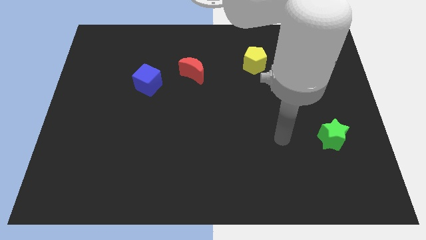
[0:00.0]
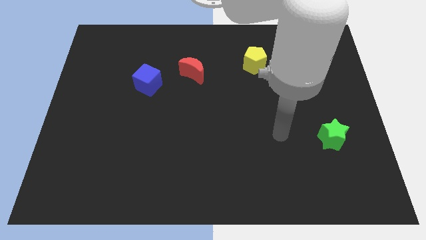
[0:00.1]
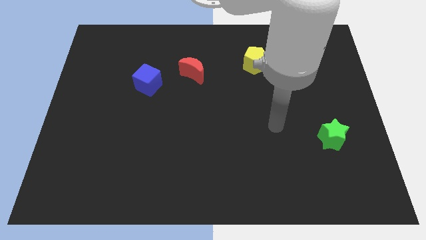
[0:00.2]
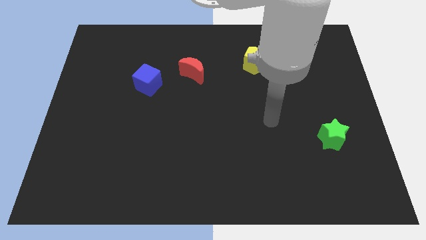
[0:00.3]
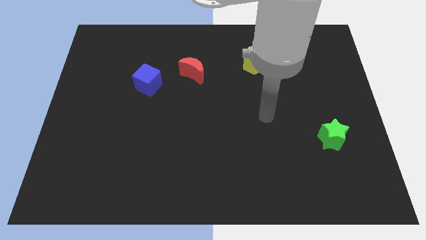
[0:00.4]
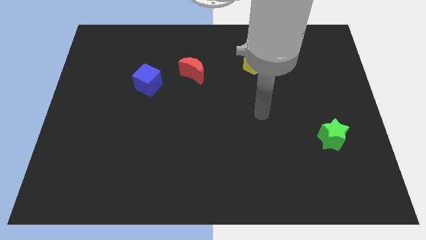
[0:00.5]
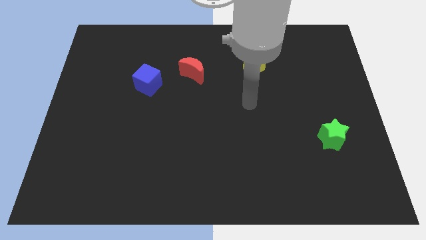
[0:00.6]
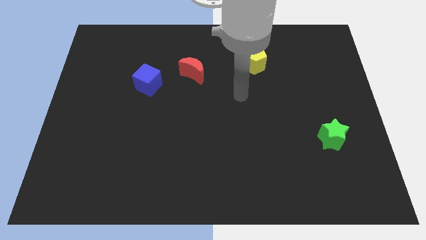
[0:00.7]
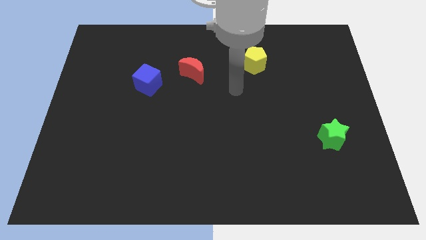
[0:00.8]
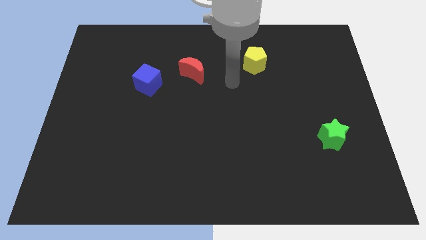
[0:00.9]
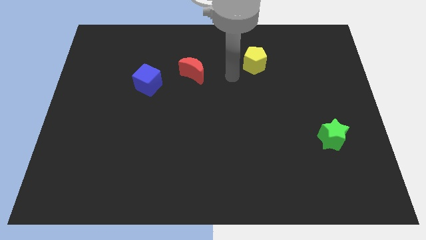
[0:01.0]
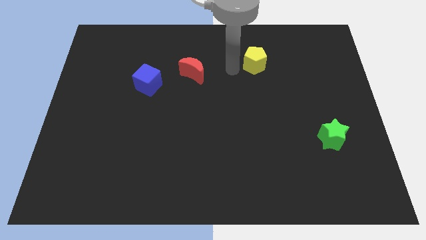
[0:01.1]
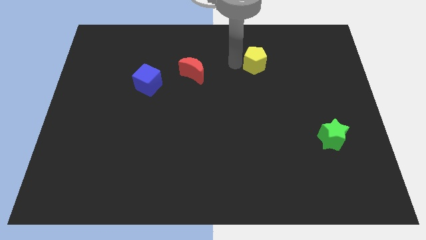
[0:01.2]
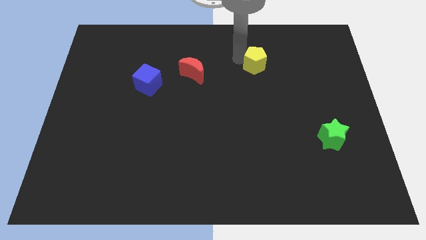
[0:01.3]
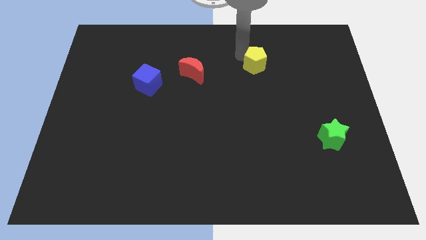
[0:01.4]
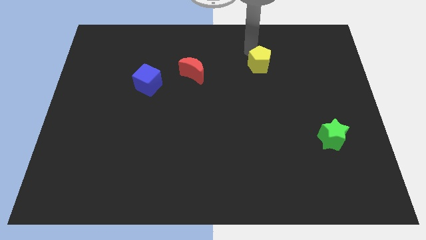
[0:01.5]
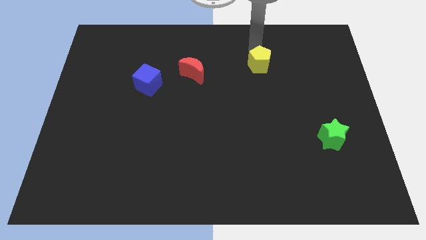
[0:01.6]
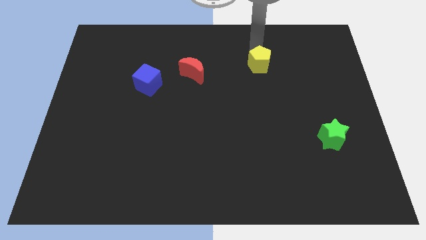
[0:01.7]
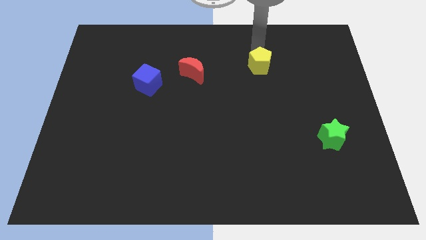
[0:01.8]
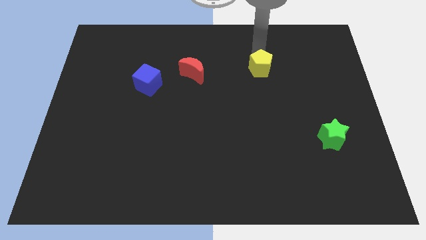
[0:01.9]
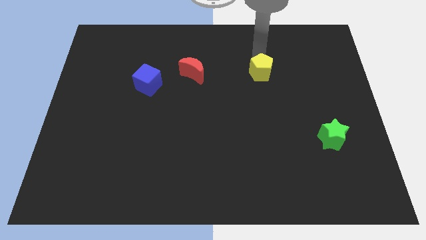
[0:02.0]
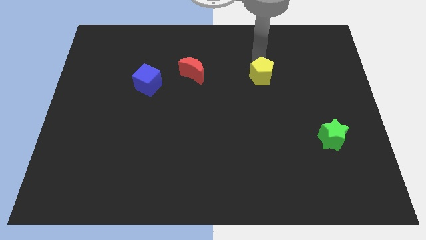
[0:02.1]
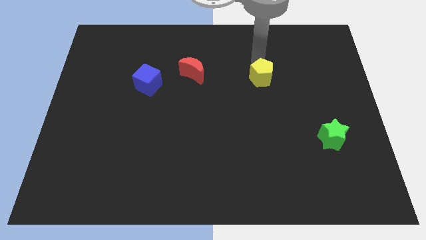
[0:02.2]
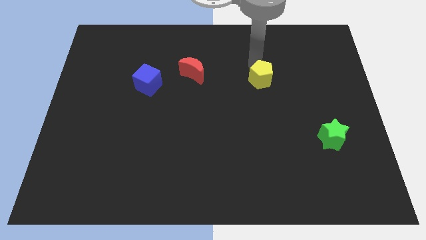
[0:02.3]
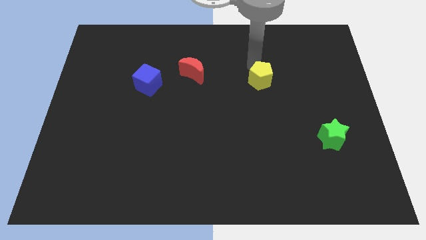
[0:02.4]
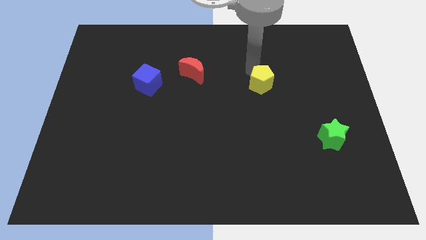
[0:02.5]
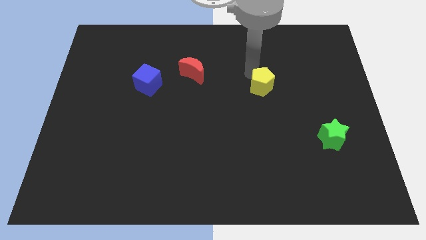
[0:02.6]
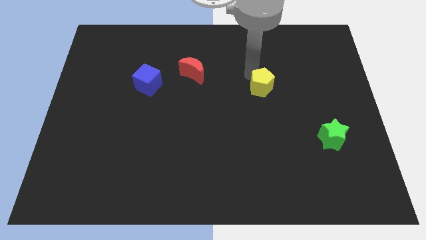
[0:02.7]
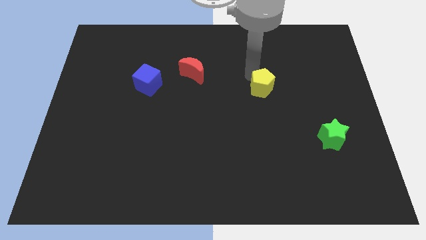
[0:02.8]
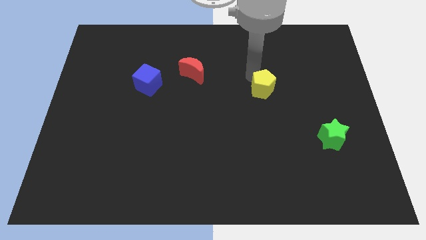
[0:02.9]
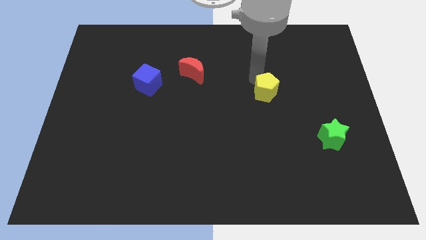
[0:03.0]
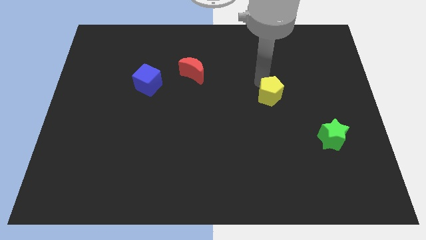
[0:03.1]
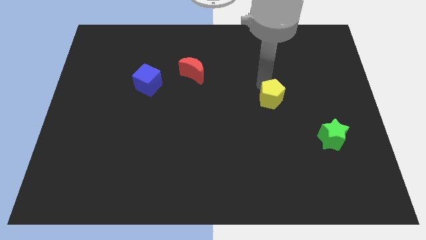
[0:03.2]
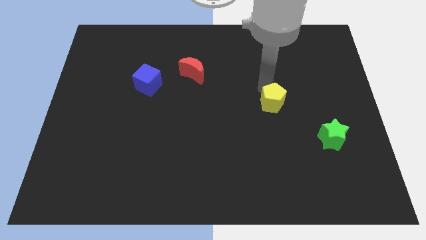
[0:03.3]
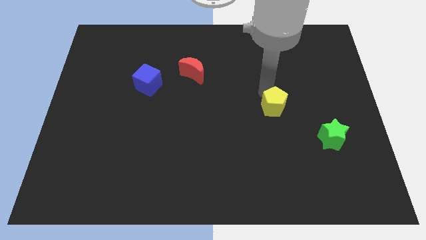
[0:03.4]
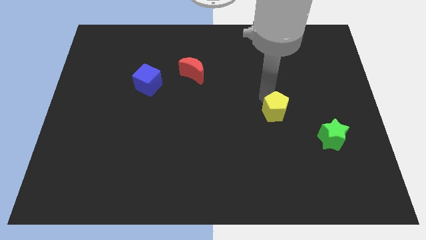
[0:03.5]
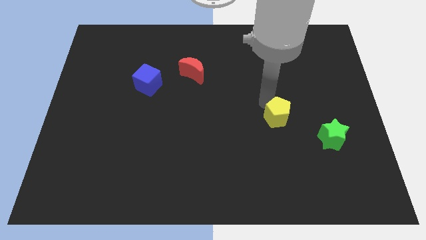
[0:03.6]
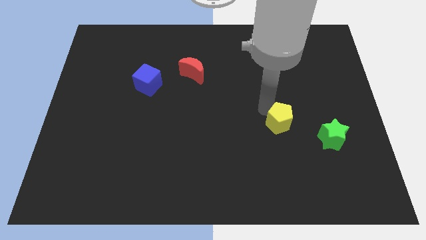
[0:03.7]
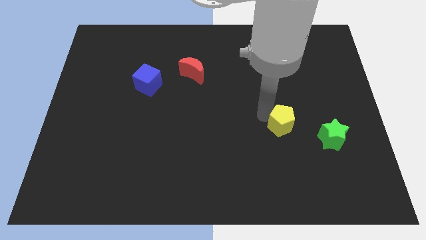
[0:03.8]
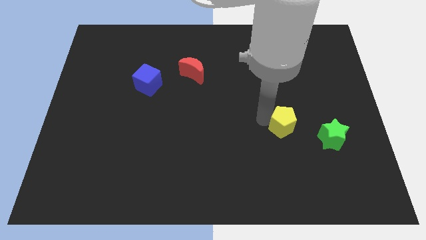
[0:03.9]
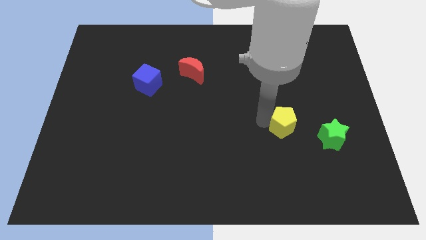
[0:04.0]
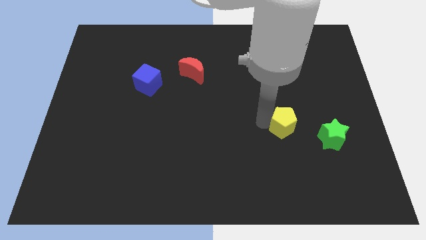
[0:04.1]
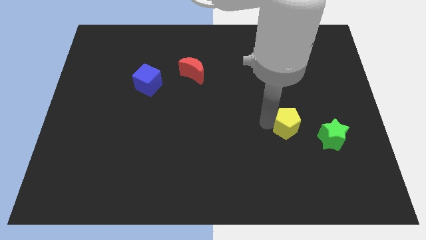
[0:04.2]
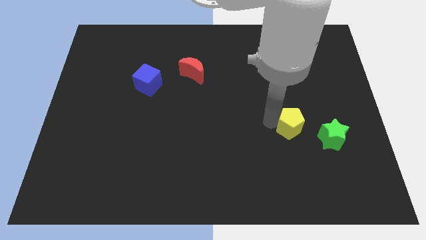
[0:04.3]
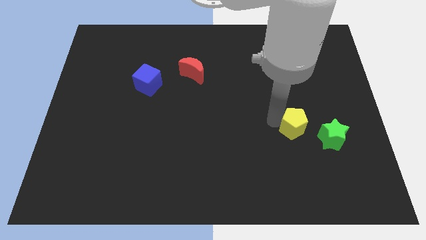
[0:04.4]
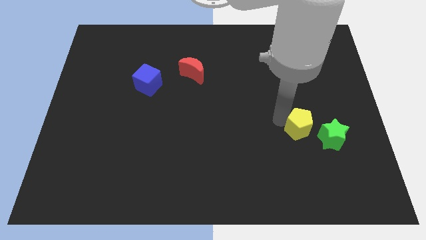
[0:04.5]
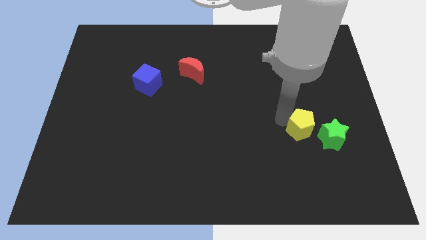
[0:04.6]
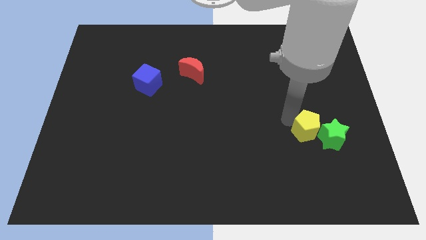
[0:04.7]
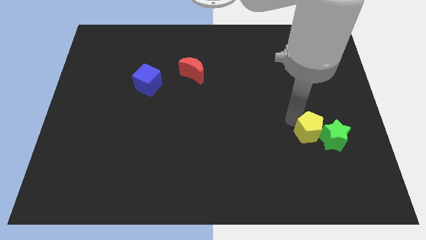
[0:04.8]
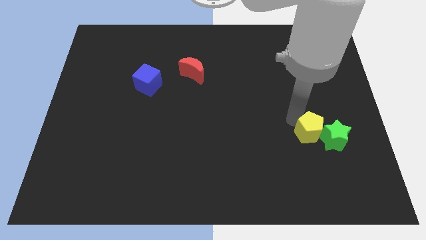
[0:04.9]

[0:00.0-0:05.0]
slide the pentagon to the green star

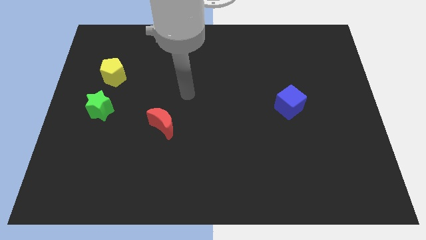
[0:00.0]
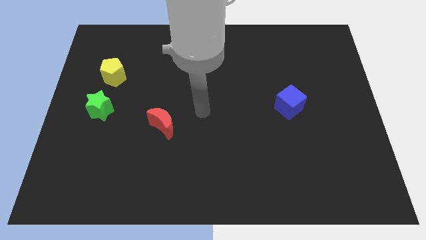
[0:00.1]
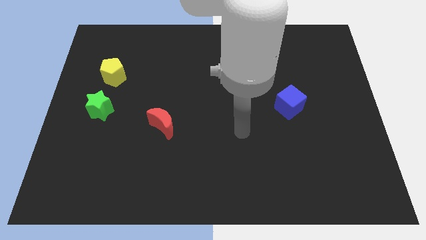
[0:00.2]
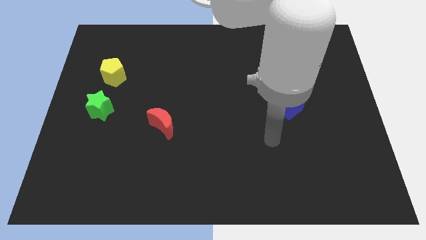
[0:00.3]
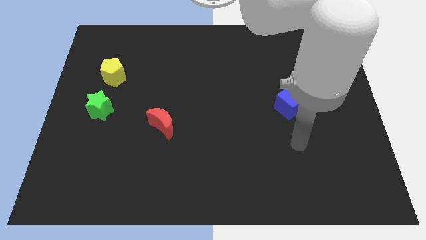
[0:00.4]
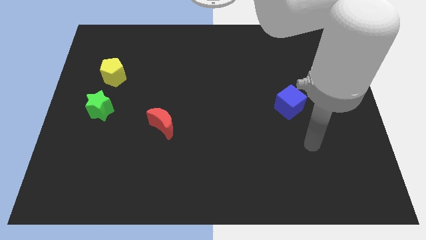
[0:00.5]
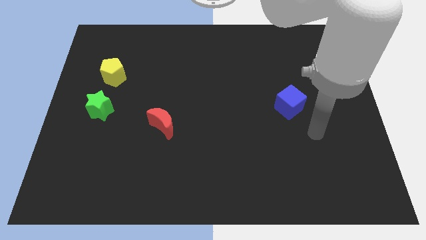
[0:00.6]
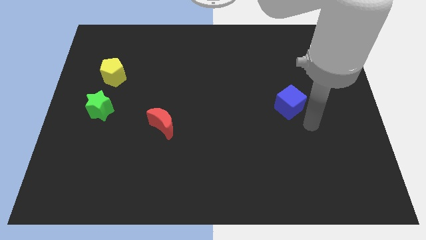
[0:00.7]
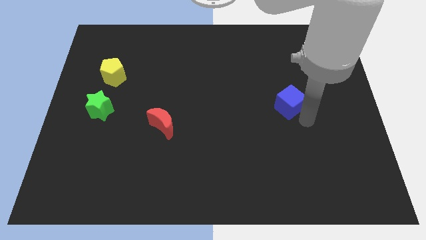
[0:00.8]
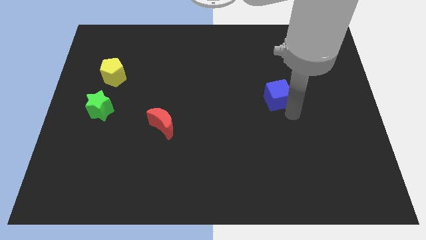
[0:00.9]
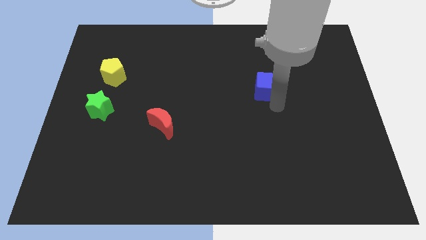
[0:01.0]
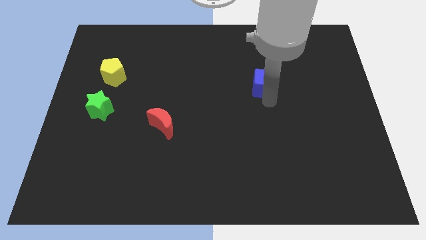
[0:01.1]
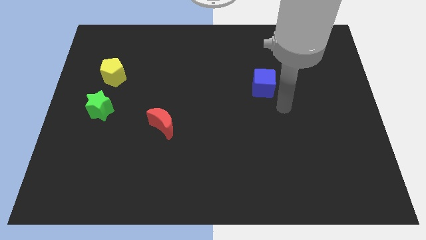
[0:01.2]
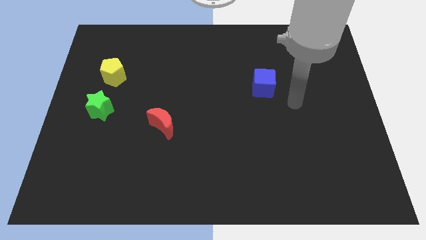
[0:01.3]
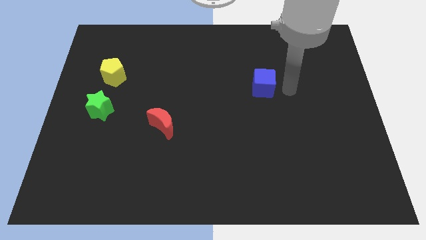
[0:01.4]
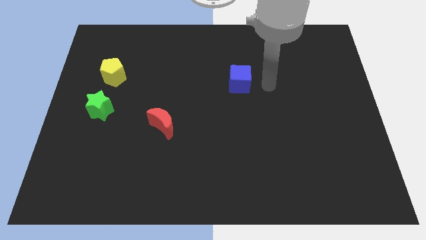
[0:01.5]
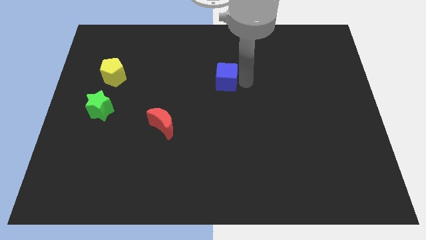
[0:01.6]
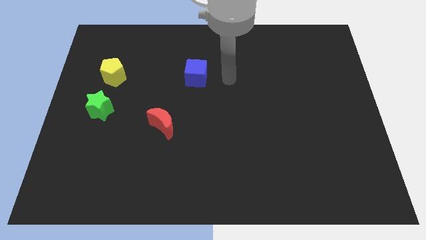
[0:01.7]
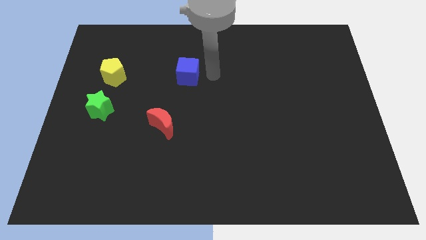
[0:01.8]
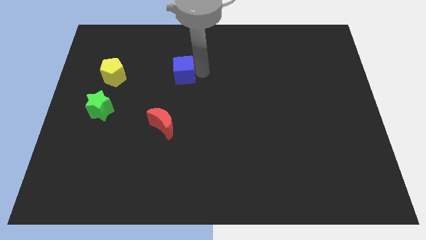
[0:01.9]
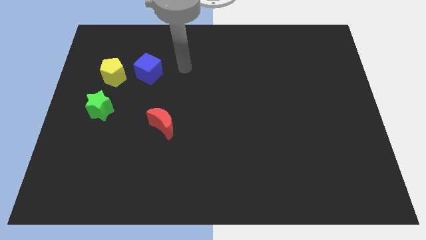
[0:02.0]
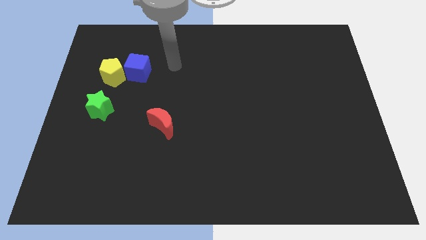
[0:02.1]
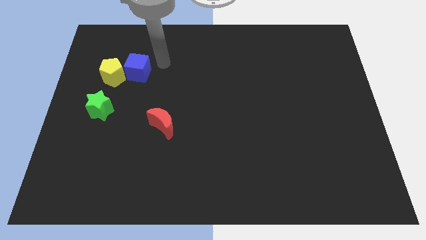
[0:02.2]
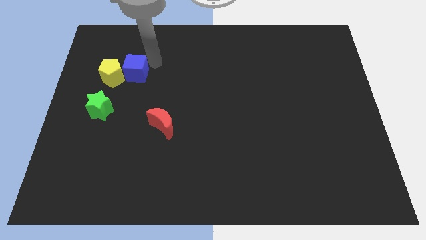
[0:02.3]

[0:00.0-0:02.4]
push the cube towards the yellow block

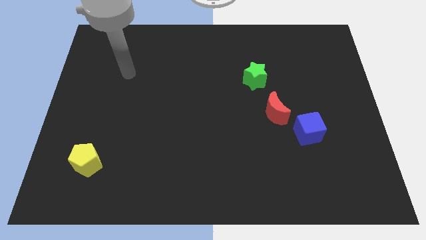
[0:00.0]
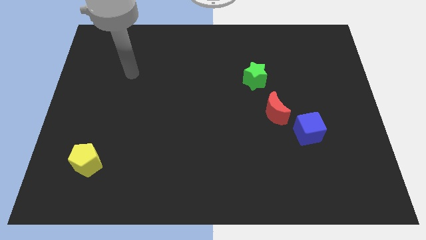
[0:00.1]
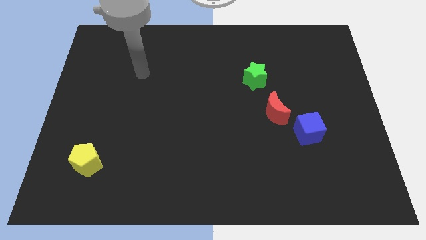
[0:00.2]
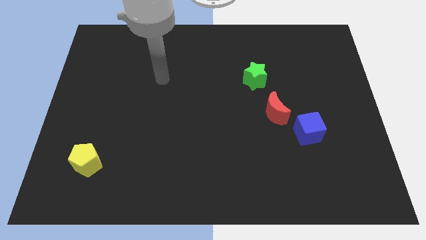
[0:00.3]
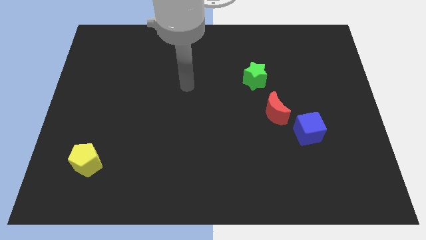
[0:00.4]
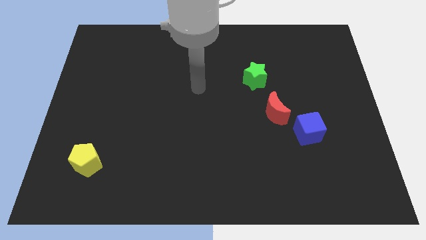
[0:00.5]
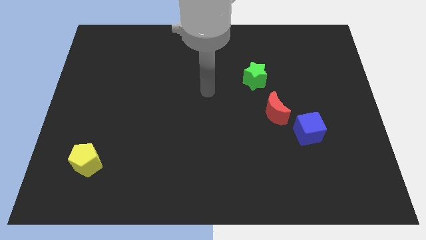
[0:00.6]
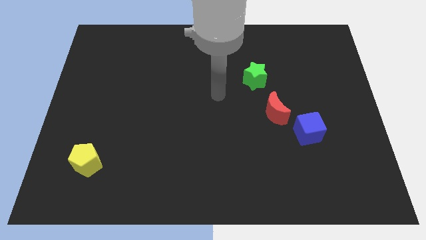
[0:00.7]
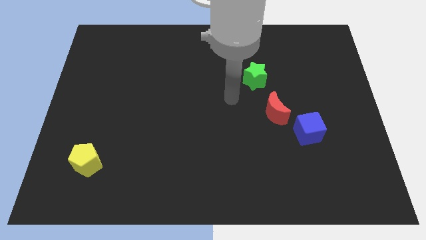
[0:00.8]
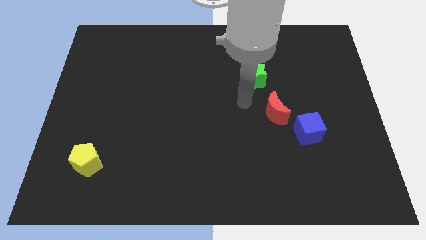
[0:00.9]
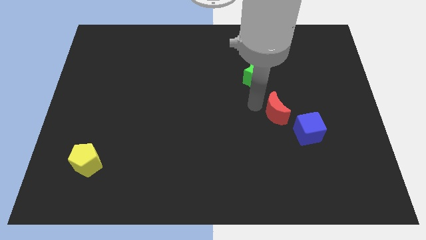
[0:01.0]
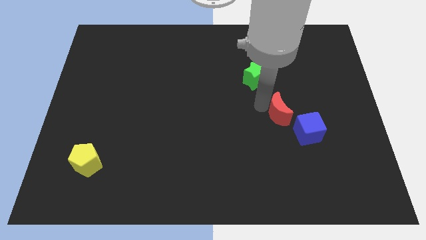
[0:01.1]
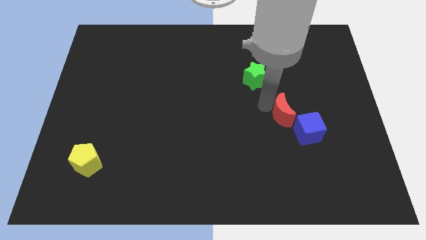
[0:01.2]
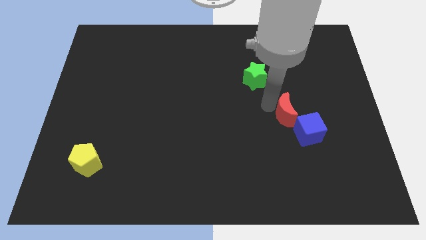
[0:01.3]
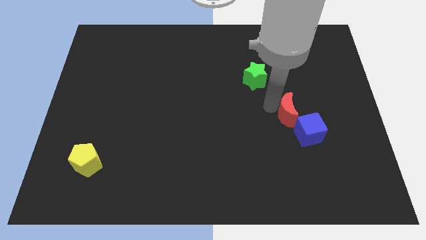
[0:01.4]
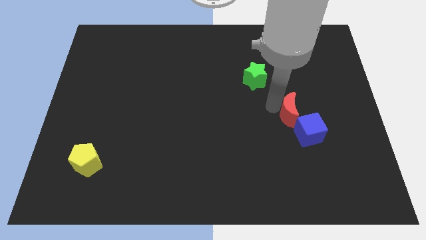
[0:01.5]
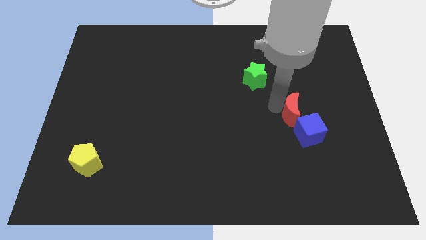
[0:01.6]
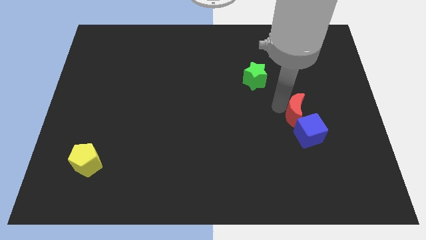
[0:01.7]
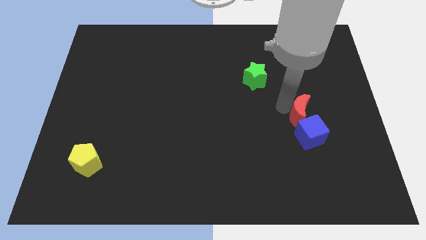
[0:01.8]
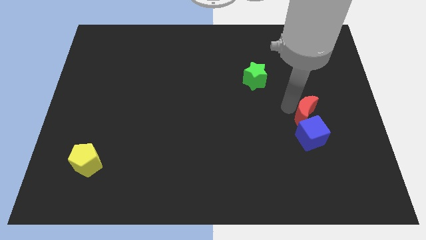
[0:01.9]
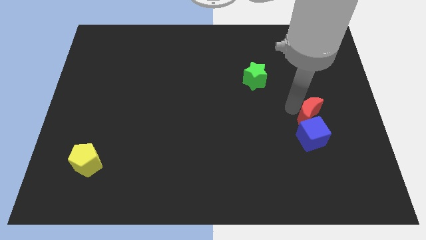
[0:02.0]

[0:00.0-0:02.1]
push the red moon next to the blue block
